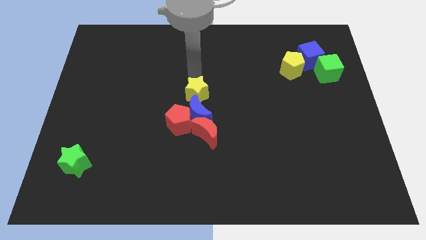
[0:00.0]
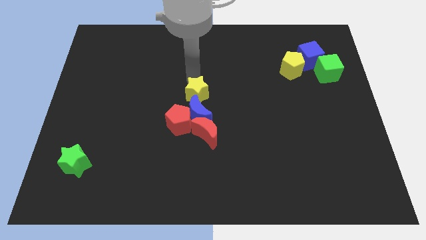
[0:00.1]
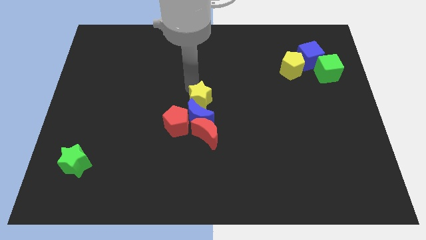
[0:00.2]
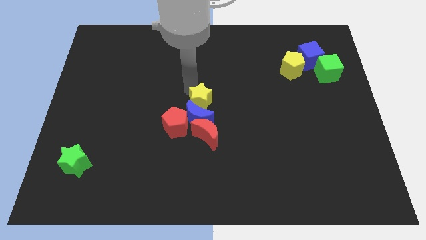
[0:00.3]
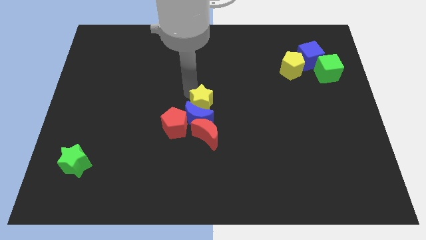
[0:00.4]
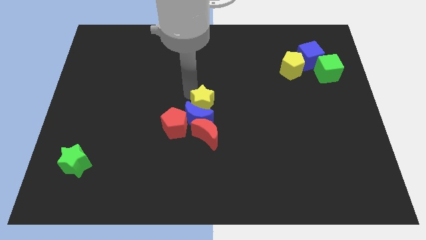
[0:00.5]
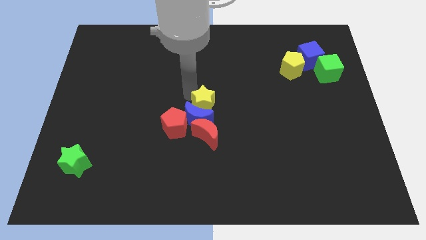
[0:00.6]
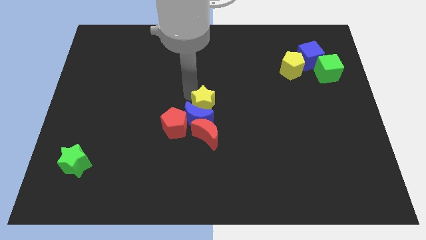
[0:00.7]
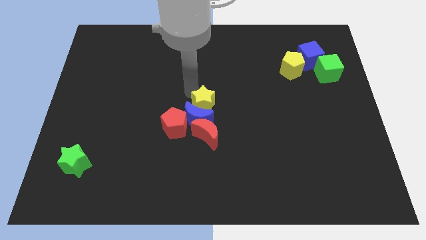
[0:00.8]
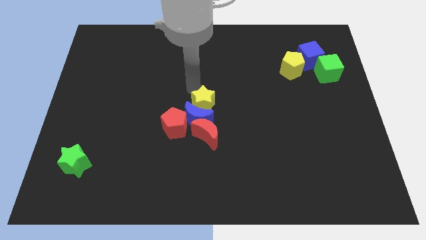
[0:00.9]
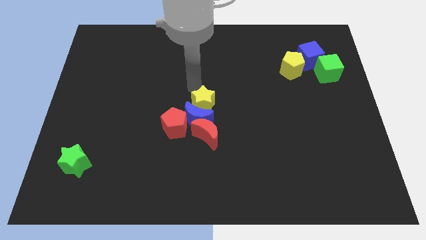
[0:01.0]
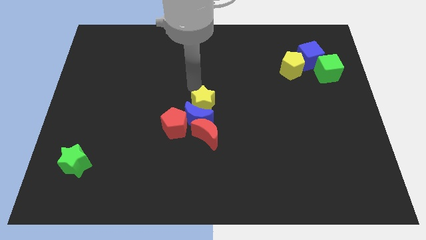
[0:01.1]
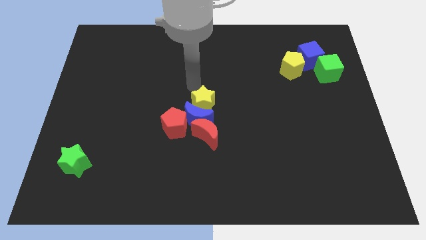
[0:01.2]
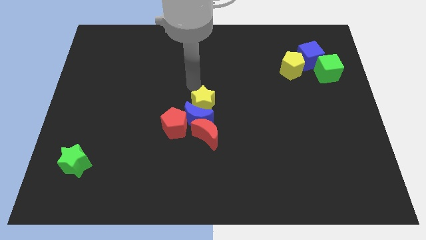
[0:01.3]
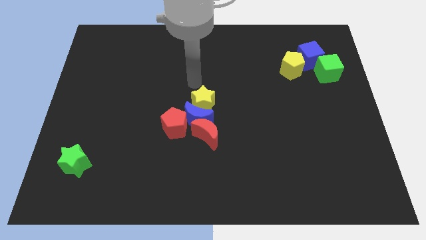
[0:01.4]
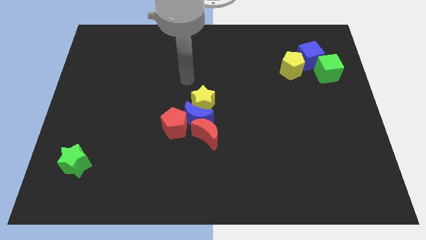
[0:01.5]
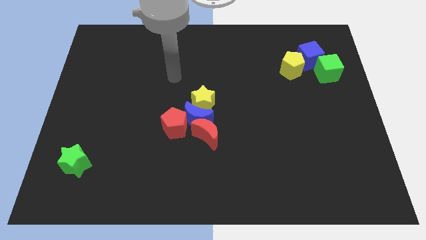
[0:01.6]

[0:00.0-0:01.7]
push the group of blocks towards the bottom side of the board

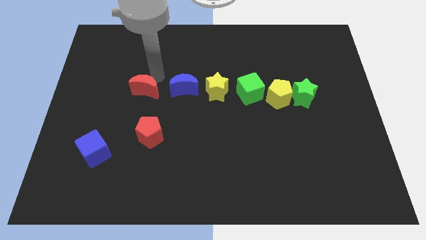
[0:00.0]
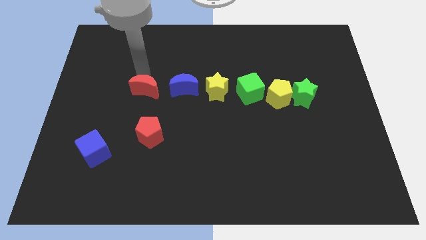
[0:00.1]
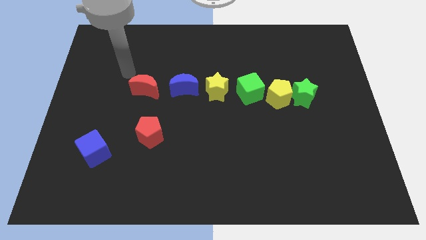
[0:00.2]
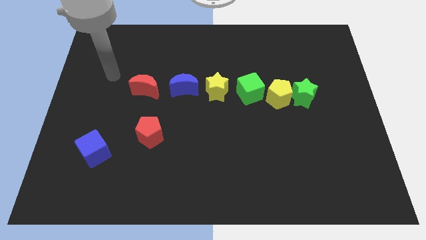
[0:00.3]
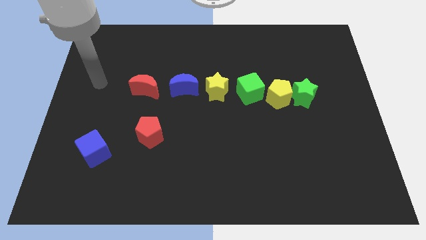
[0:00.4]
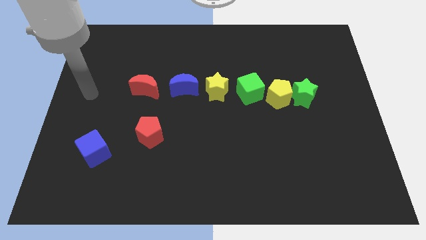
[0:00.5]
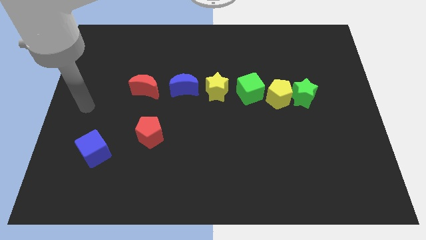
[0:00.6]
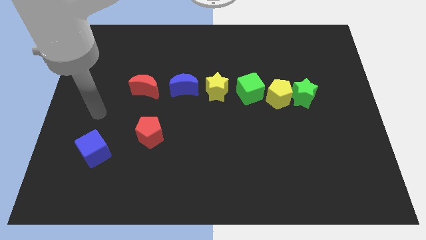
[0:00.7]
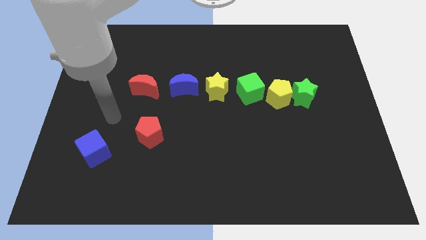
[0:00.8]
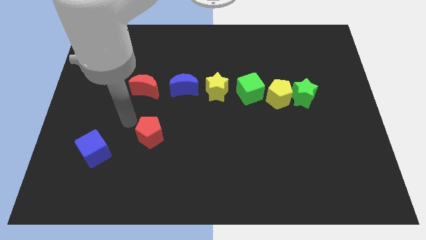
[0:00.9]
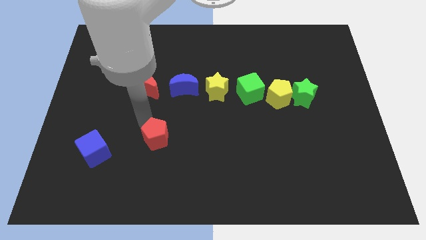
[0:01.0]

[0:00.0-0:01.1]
move your arm towards the red pentagon

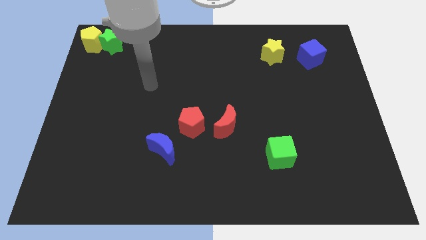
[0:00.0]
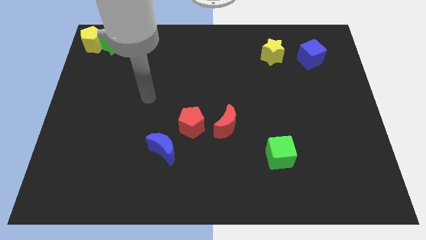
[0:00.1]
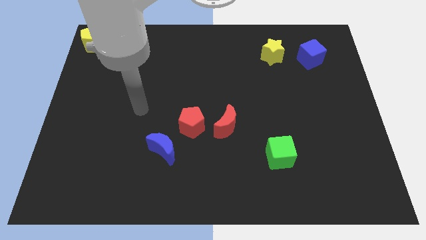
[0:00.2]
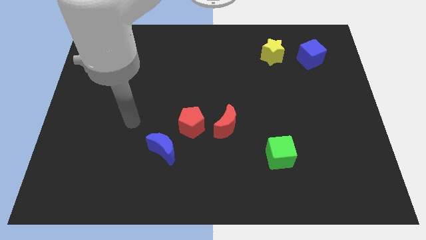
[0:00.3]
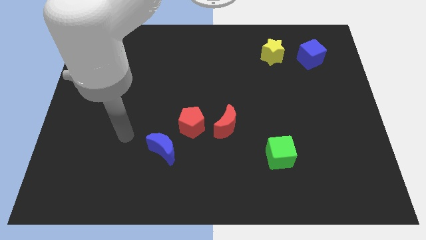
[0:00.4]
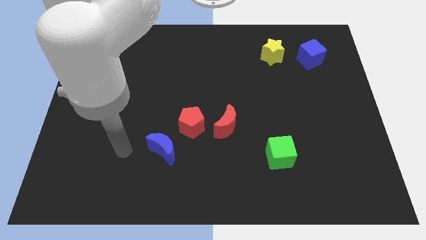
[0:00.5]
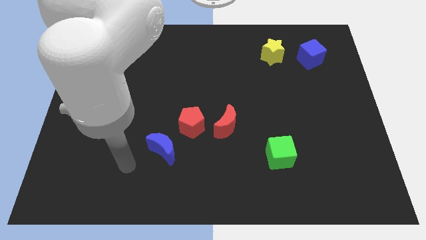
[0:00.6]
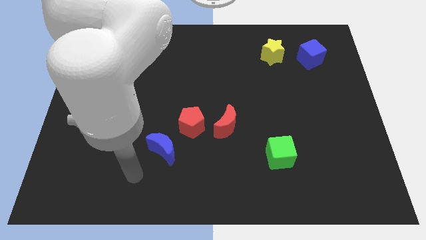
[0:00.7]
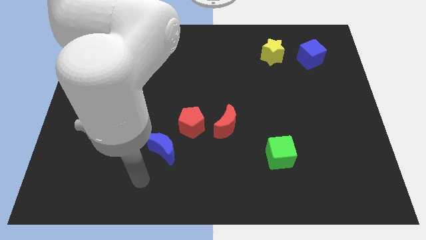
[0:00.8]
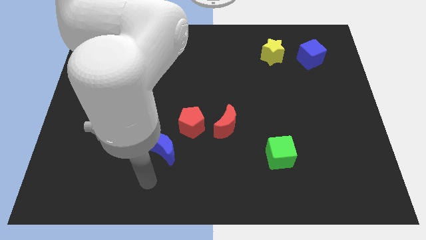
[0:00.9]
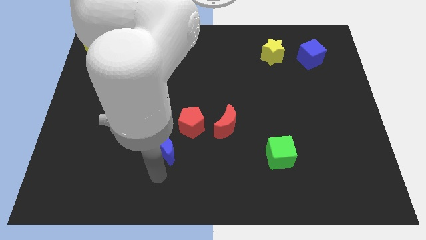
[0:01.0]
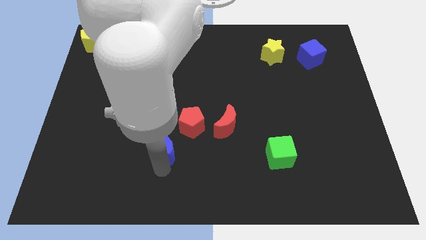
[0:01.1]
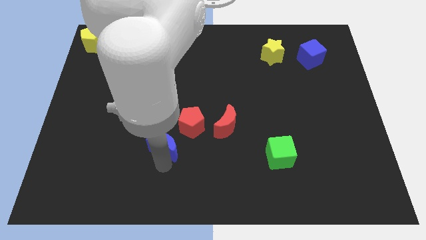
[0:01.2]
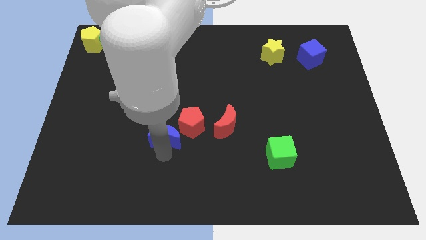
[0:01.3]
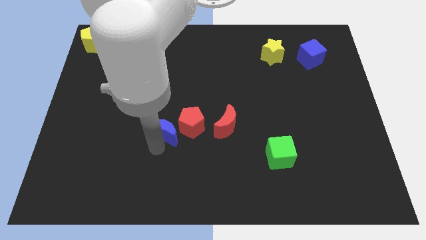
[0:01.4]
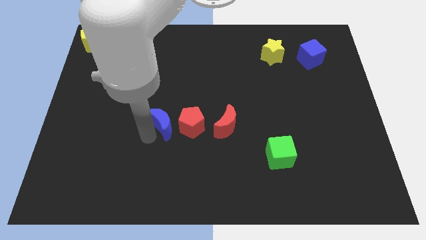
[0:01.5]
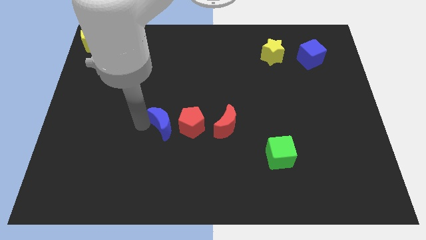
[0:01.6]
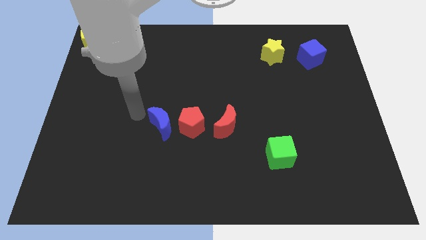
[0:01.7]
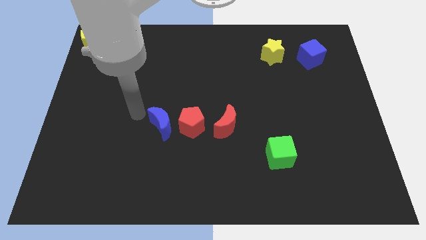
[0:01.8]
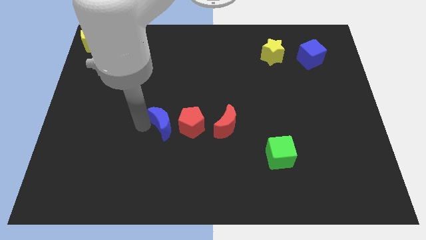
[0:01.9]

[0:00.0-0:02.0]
place the blue moon to the left side of the red pentagon

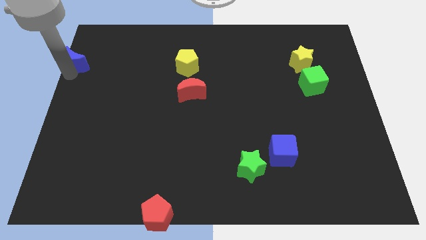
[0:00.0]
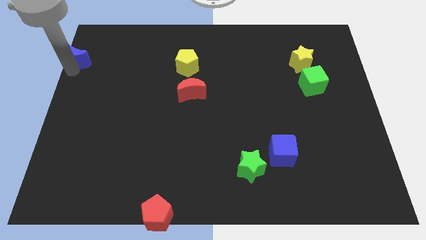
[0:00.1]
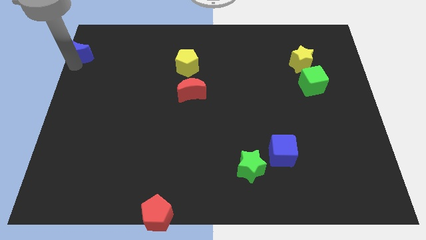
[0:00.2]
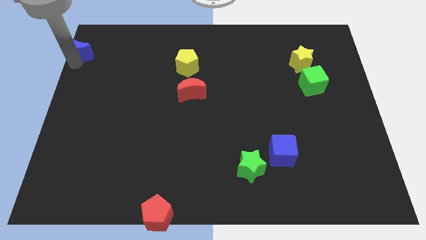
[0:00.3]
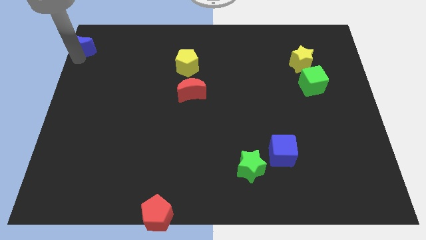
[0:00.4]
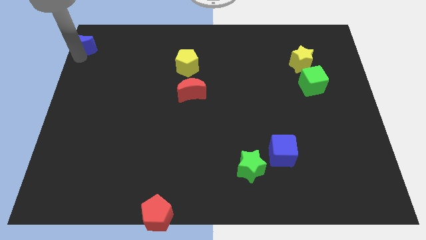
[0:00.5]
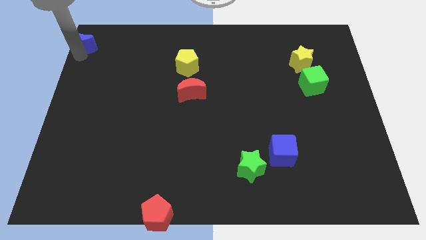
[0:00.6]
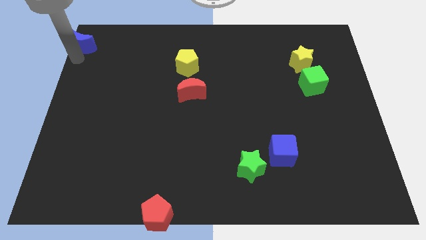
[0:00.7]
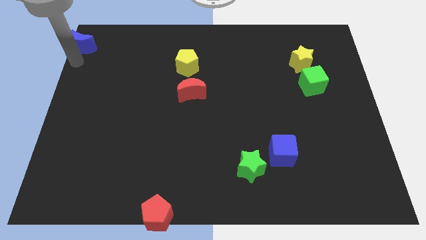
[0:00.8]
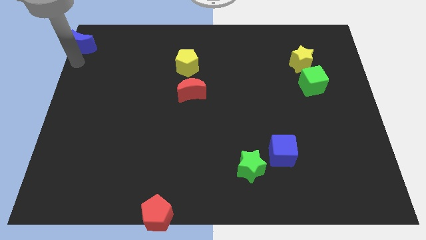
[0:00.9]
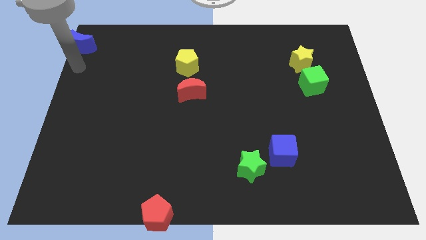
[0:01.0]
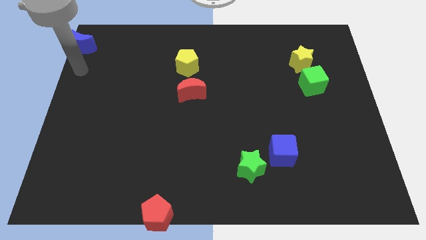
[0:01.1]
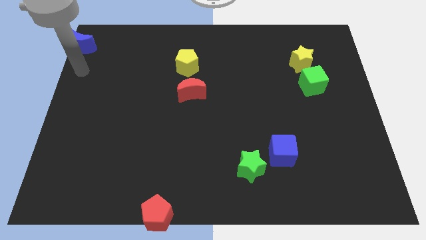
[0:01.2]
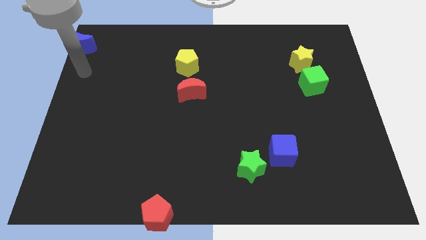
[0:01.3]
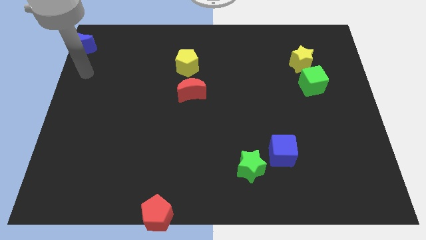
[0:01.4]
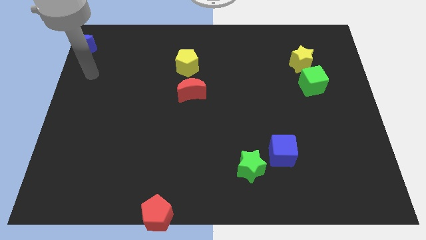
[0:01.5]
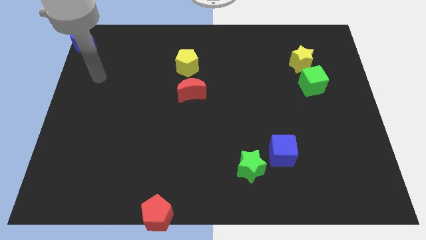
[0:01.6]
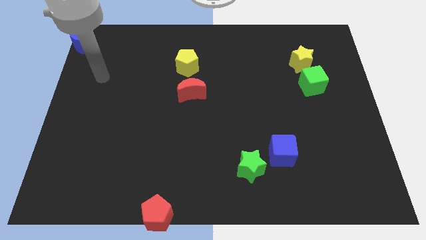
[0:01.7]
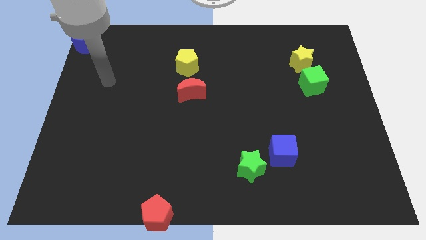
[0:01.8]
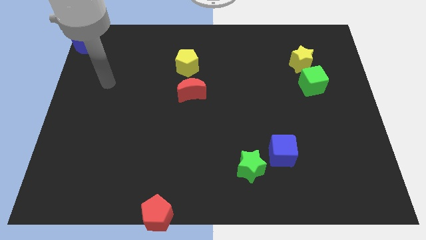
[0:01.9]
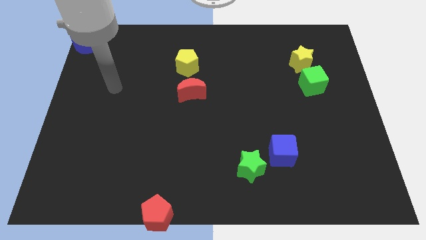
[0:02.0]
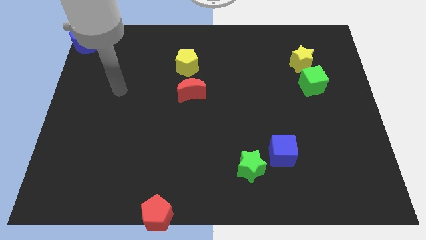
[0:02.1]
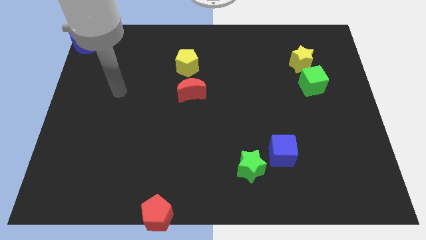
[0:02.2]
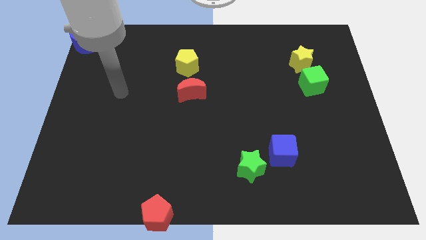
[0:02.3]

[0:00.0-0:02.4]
push the blue cube to the top left corner of the board

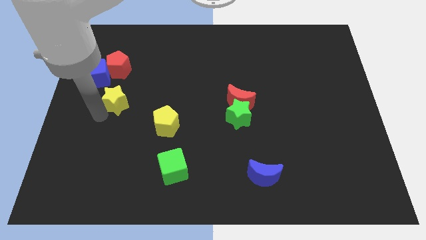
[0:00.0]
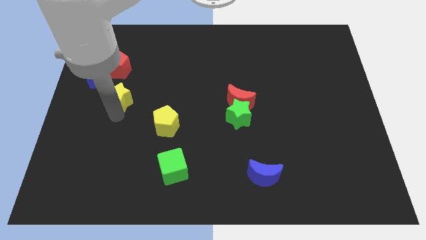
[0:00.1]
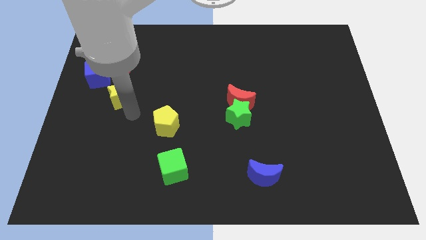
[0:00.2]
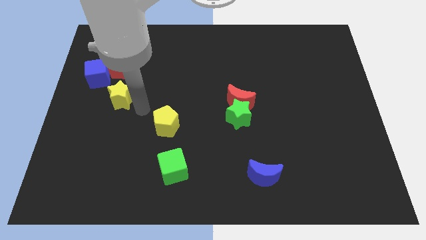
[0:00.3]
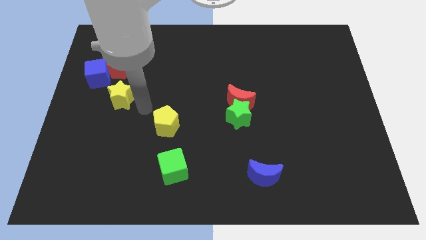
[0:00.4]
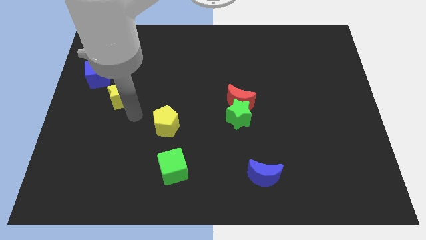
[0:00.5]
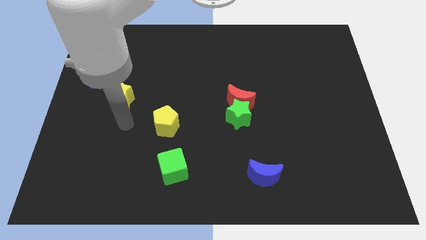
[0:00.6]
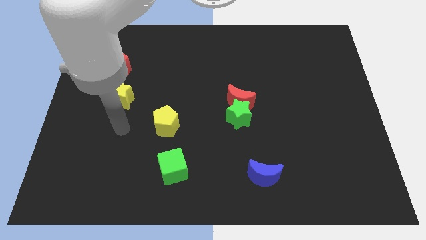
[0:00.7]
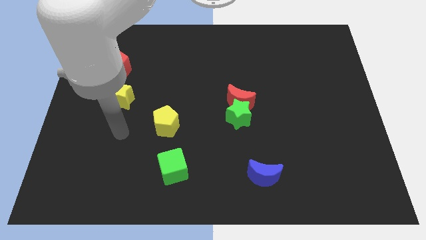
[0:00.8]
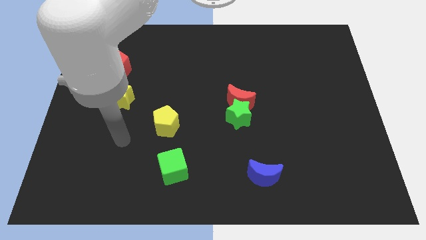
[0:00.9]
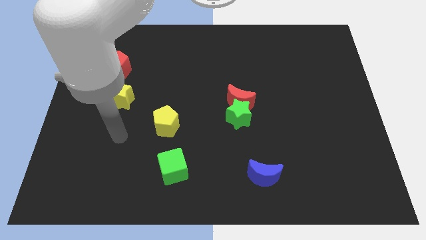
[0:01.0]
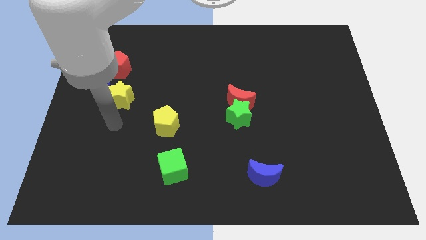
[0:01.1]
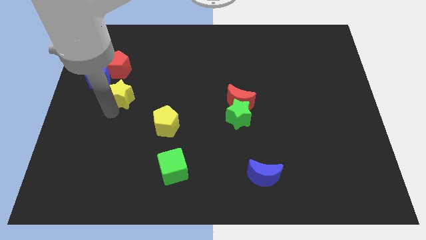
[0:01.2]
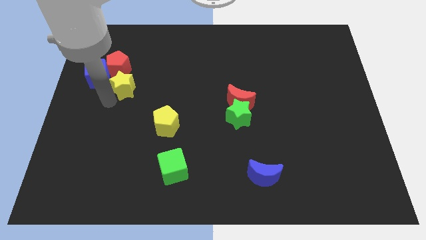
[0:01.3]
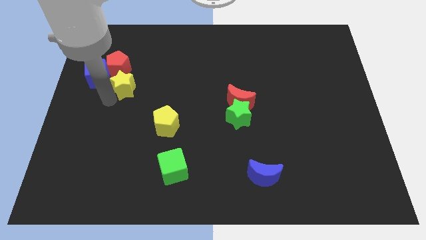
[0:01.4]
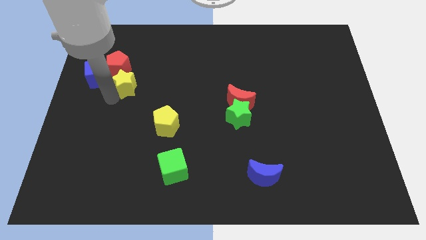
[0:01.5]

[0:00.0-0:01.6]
move the yellow star to the bottom right of the red pentagon

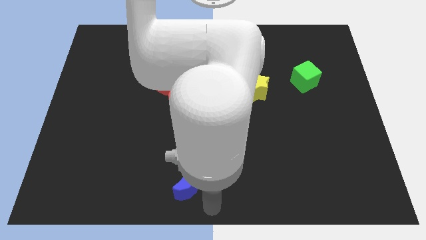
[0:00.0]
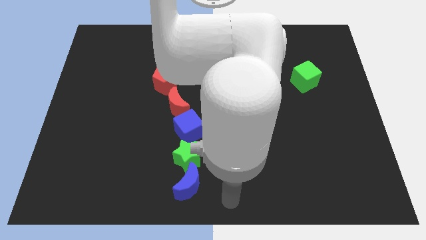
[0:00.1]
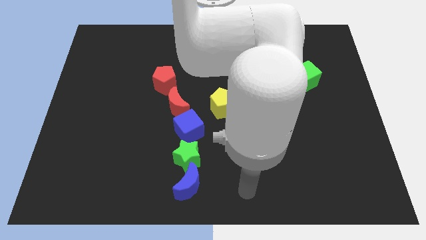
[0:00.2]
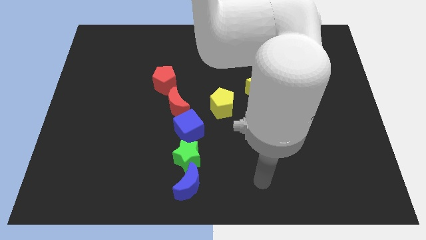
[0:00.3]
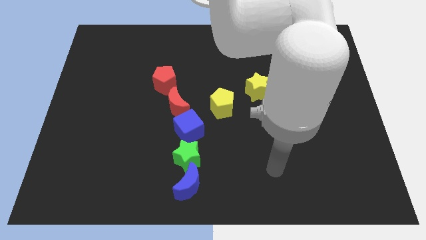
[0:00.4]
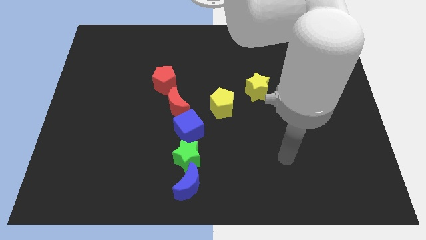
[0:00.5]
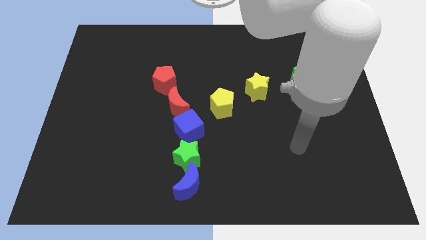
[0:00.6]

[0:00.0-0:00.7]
move your arm away from the blue moon
